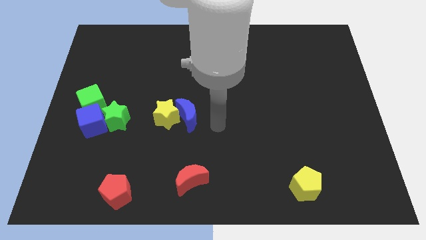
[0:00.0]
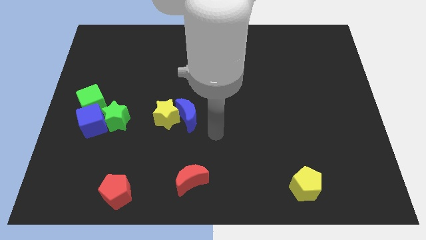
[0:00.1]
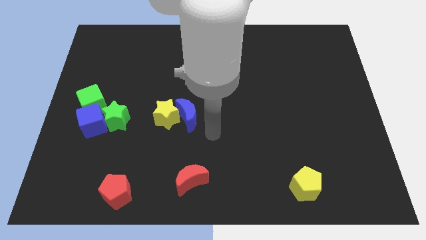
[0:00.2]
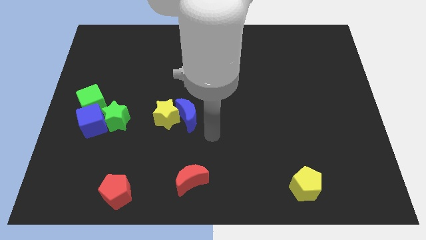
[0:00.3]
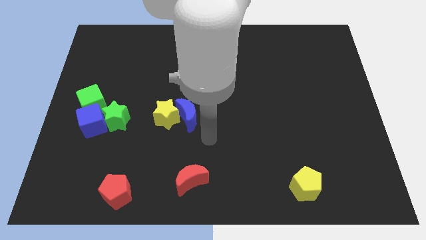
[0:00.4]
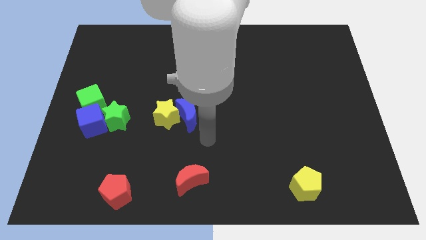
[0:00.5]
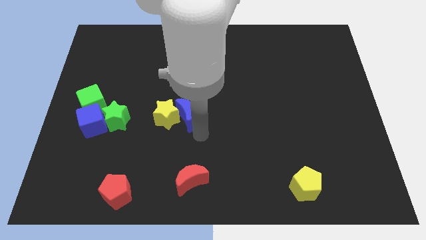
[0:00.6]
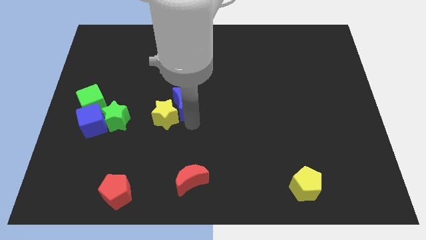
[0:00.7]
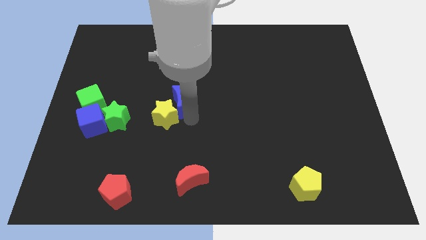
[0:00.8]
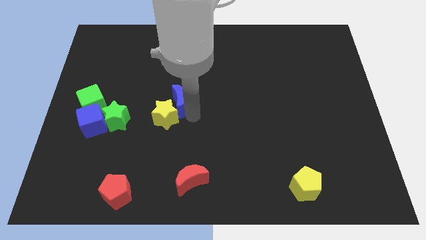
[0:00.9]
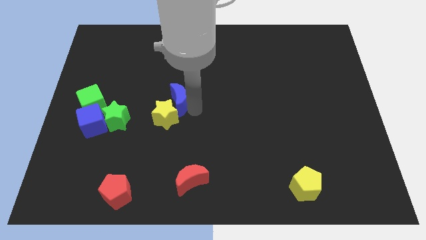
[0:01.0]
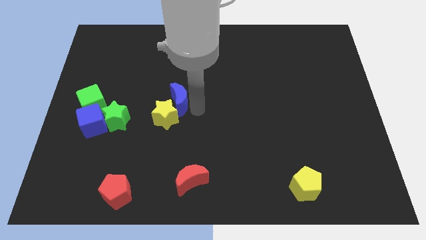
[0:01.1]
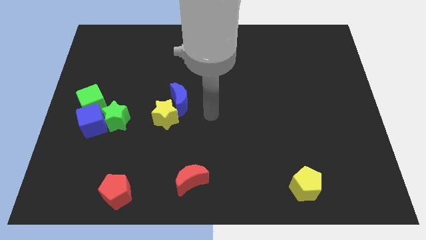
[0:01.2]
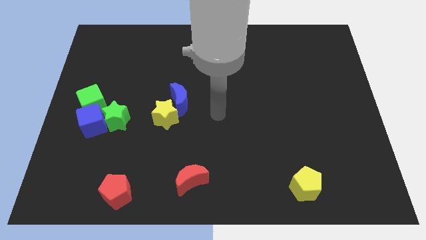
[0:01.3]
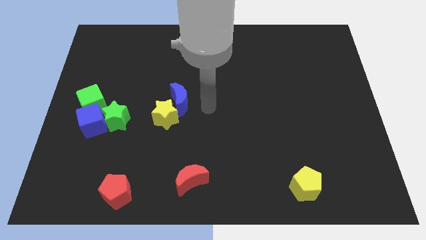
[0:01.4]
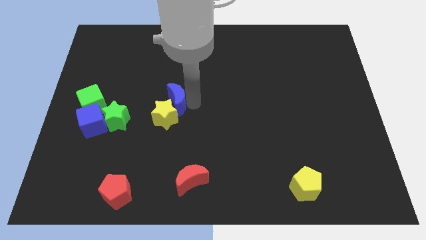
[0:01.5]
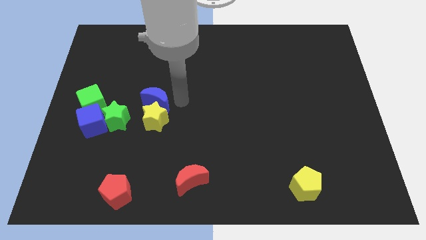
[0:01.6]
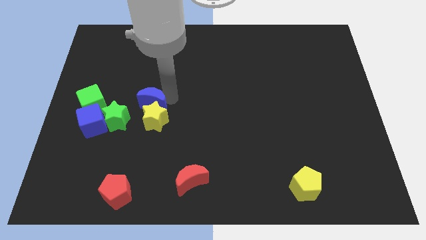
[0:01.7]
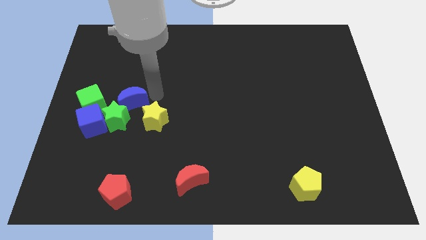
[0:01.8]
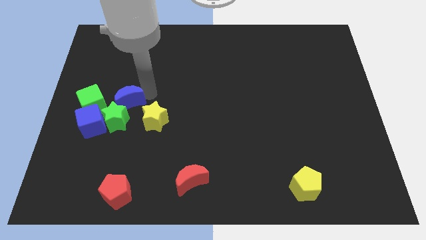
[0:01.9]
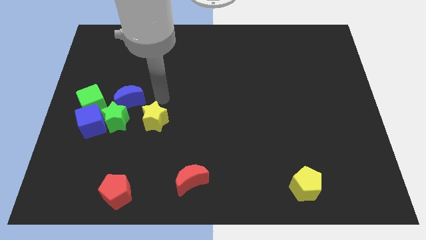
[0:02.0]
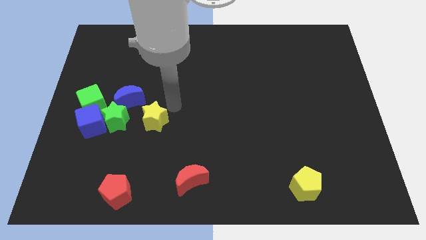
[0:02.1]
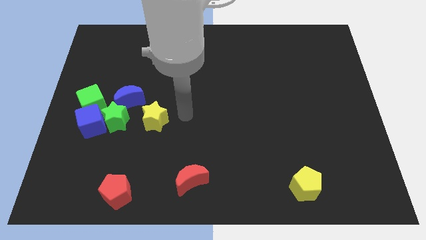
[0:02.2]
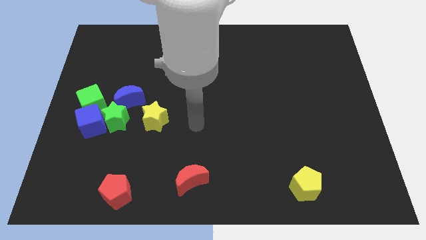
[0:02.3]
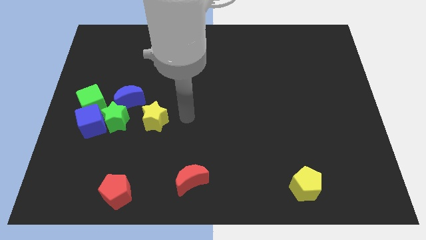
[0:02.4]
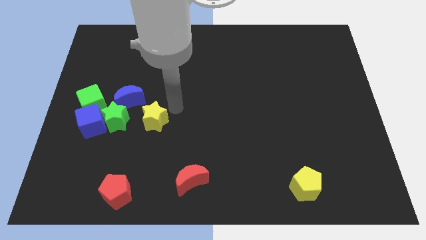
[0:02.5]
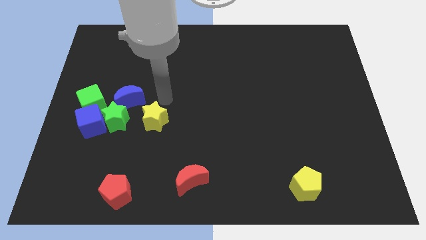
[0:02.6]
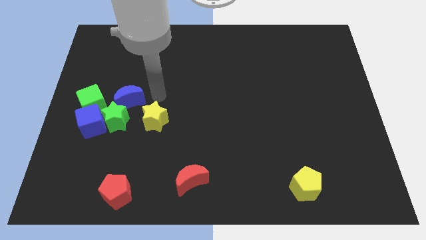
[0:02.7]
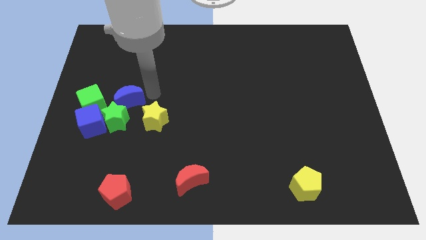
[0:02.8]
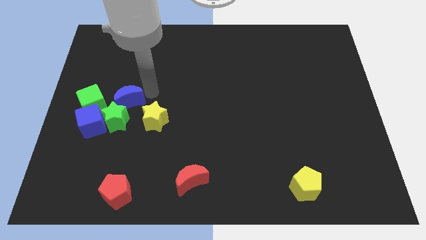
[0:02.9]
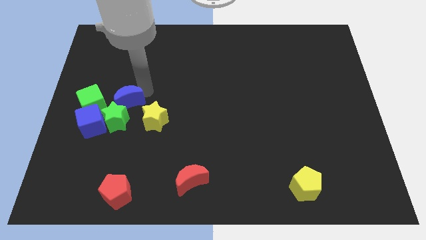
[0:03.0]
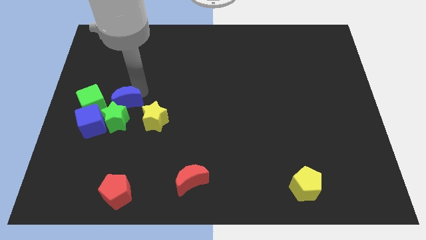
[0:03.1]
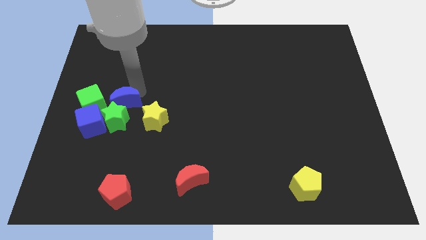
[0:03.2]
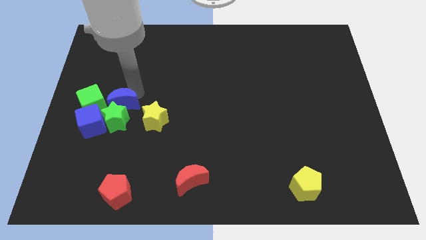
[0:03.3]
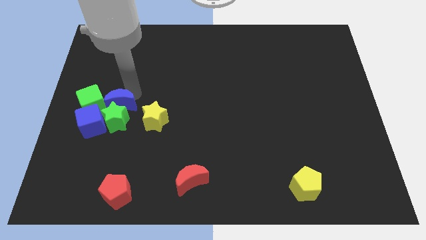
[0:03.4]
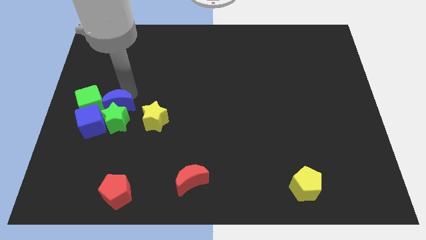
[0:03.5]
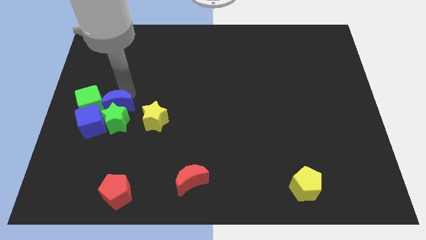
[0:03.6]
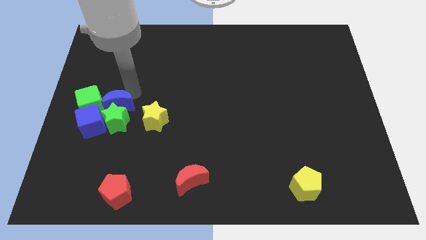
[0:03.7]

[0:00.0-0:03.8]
place blue moon above the green star

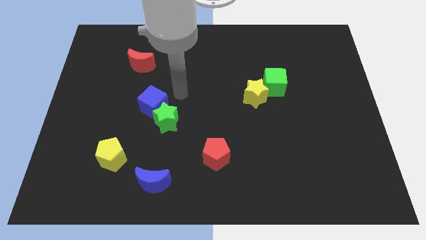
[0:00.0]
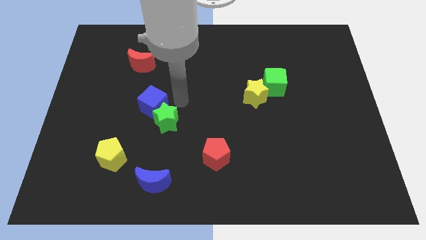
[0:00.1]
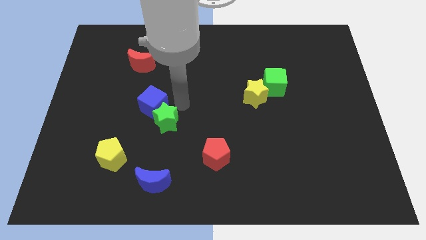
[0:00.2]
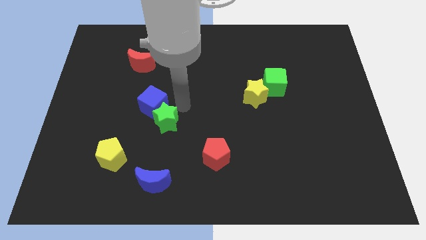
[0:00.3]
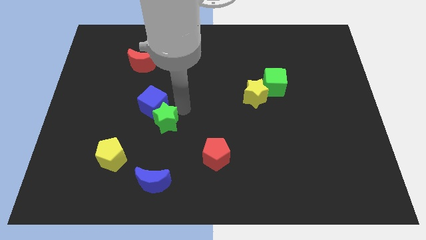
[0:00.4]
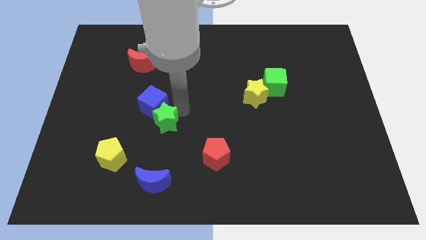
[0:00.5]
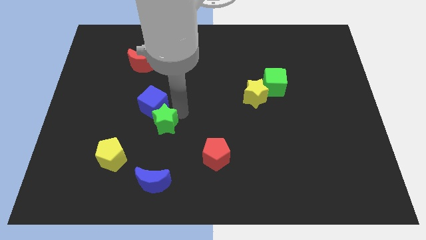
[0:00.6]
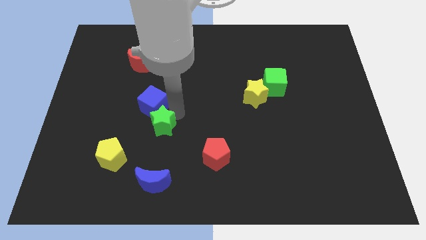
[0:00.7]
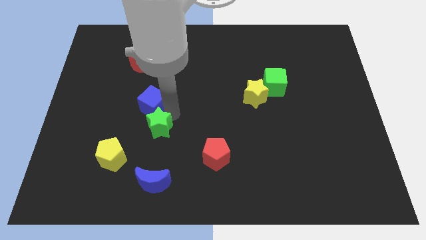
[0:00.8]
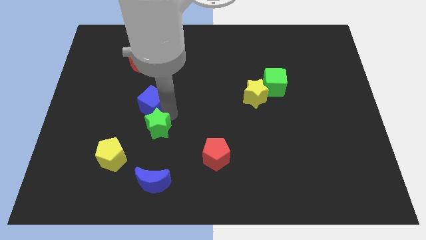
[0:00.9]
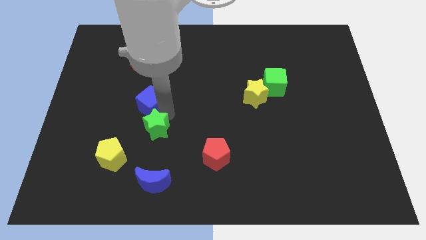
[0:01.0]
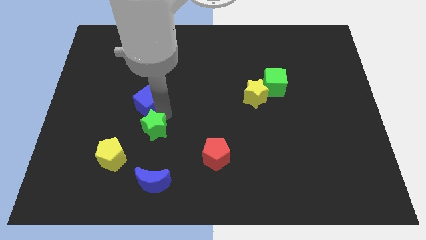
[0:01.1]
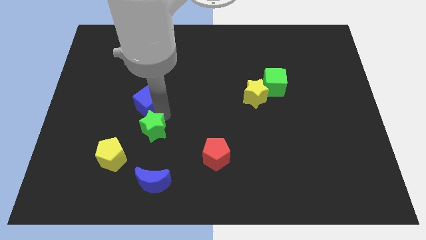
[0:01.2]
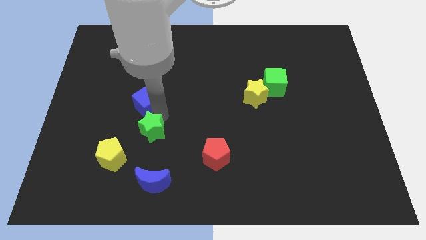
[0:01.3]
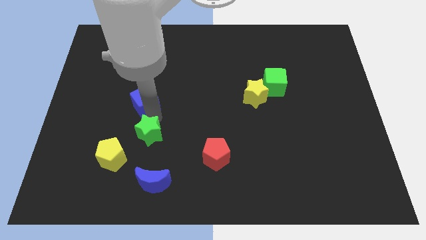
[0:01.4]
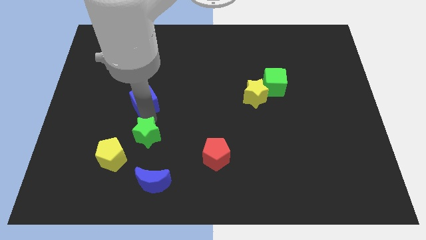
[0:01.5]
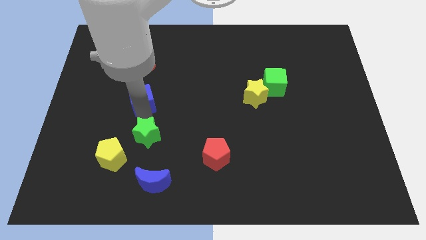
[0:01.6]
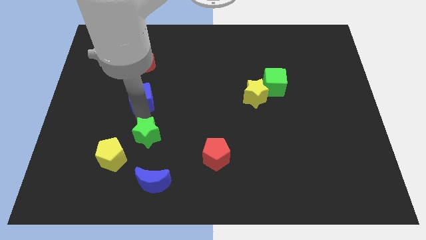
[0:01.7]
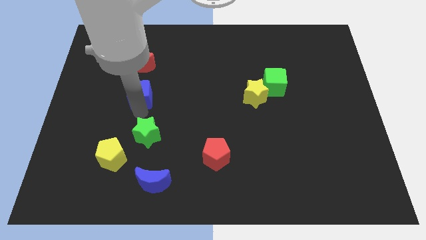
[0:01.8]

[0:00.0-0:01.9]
separate the green star and blue cube

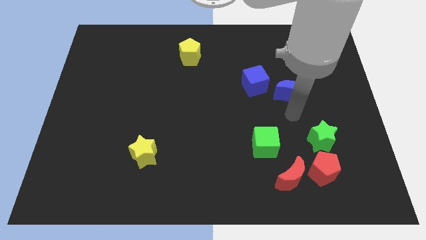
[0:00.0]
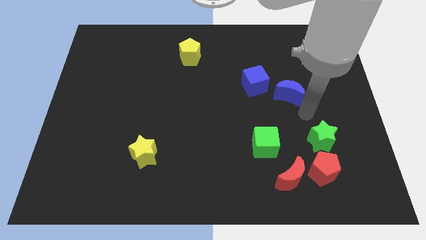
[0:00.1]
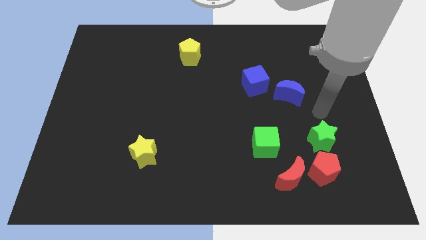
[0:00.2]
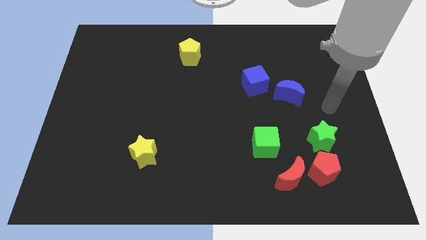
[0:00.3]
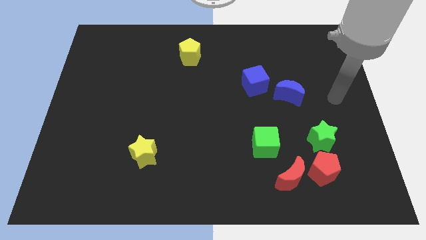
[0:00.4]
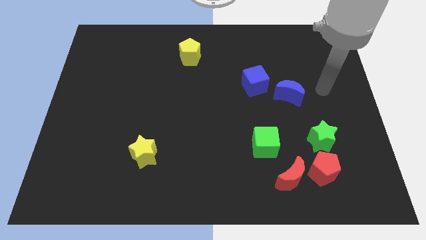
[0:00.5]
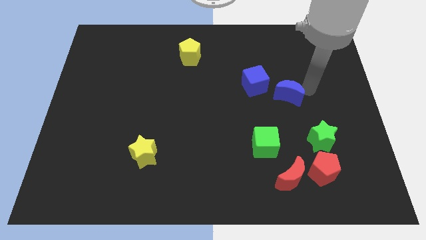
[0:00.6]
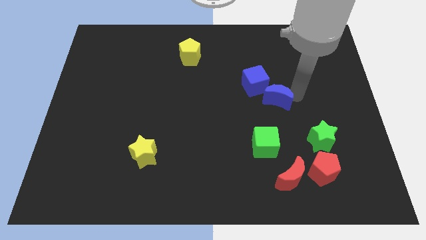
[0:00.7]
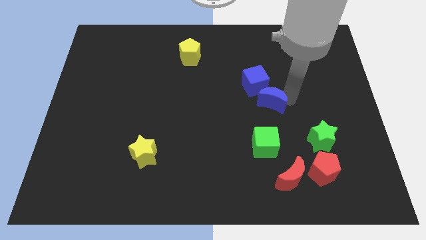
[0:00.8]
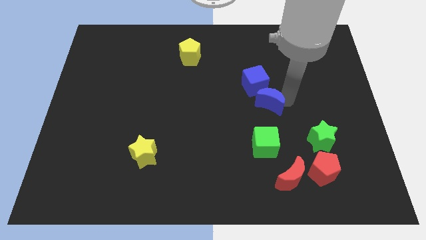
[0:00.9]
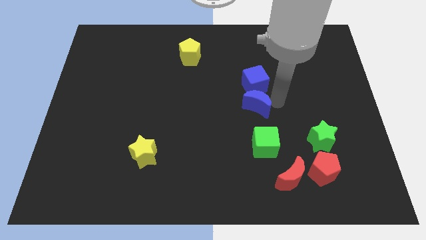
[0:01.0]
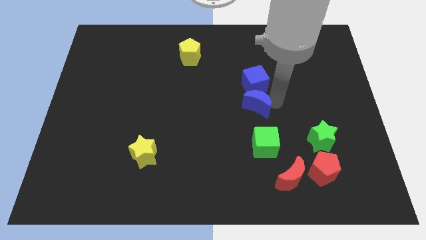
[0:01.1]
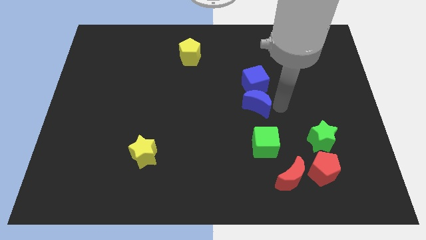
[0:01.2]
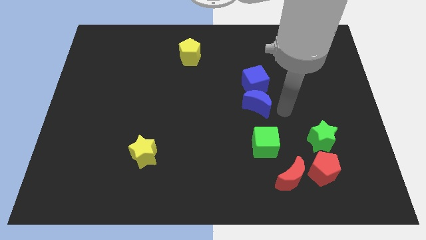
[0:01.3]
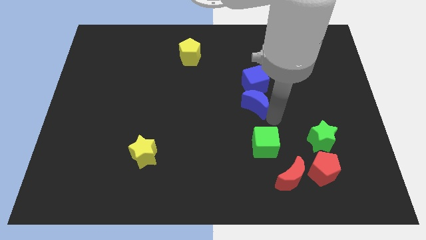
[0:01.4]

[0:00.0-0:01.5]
place the blue moon below the blue cube

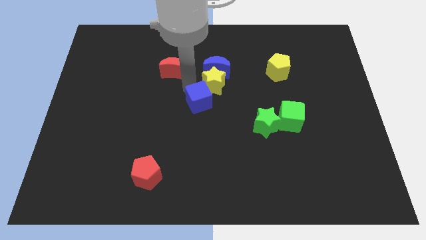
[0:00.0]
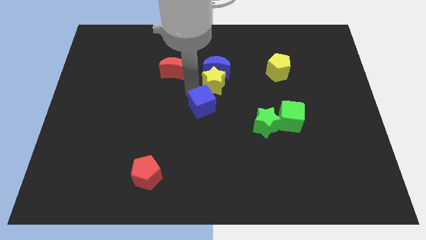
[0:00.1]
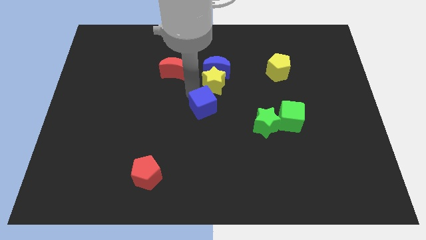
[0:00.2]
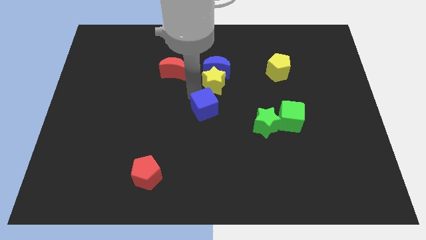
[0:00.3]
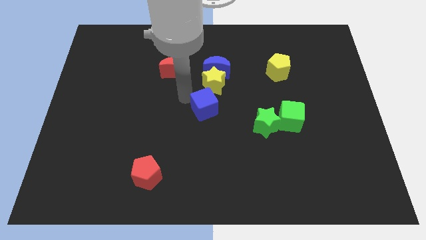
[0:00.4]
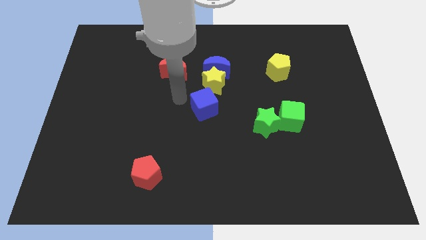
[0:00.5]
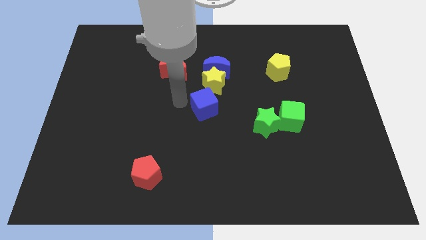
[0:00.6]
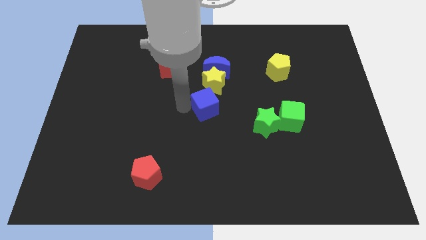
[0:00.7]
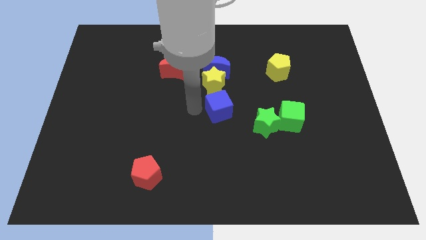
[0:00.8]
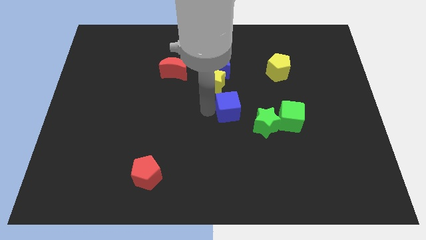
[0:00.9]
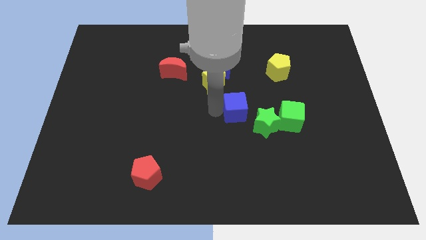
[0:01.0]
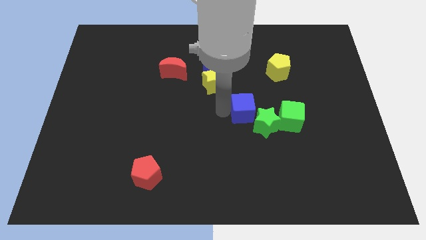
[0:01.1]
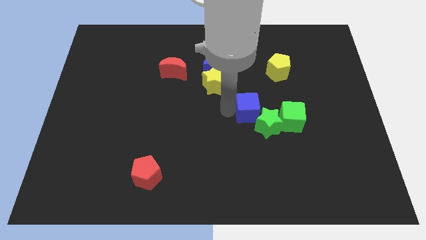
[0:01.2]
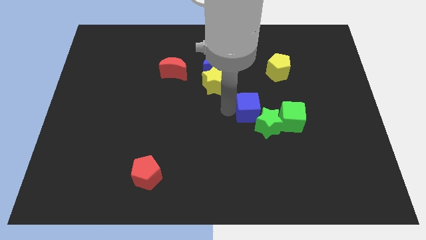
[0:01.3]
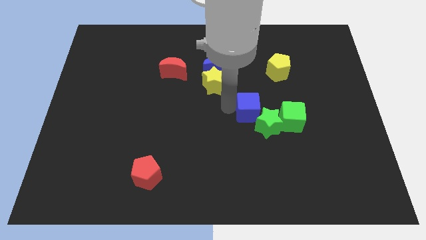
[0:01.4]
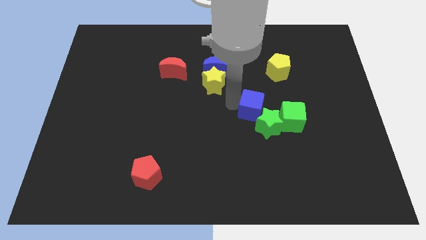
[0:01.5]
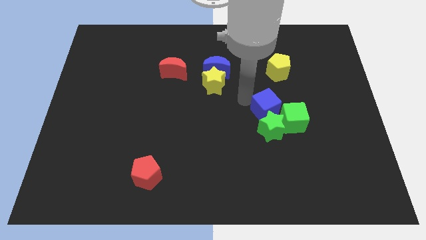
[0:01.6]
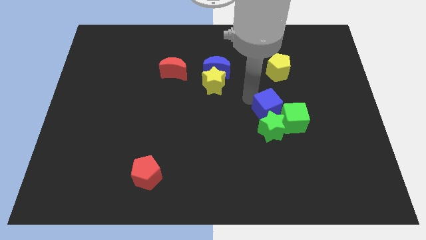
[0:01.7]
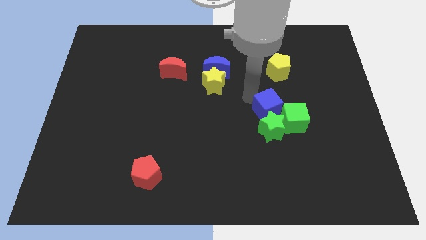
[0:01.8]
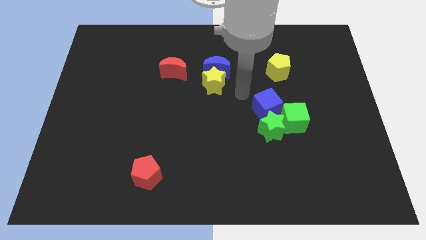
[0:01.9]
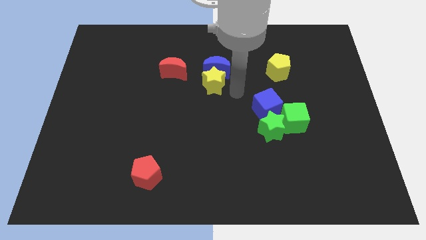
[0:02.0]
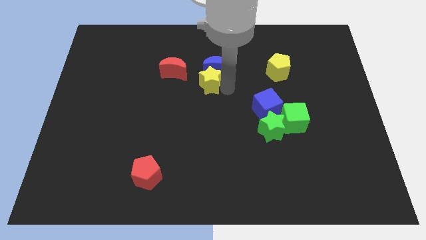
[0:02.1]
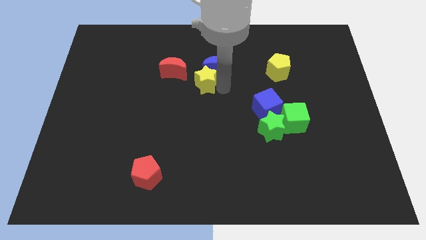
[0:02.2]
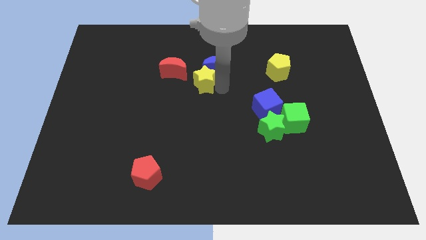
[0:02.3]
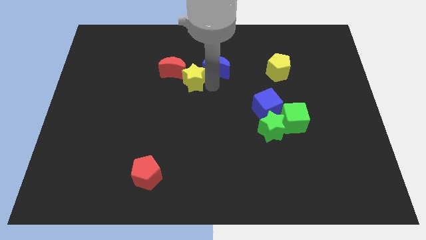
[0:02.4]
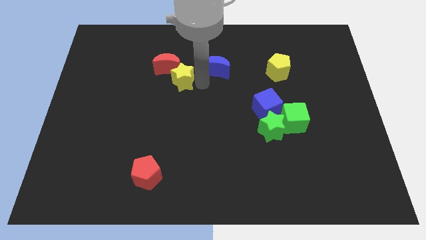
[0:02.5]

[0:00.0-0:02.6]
push the blue cube close to the green blocks
